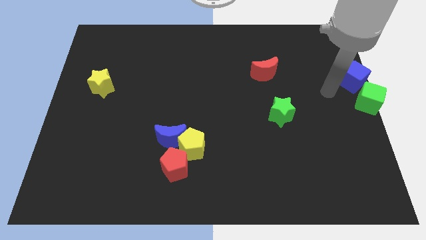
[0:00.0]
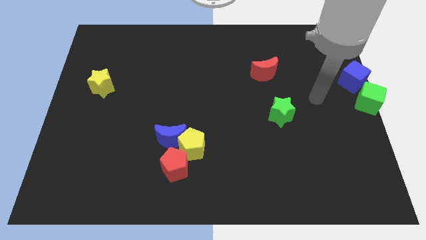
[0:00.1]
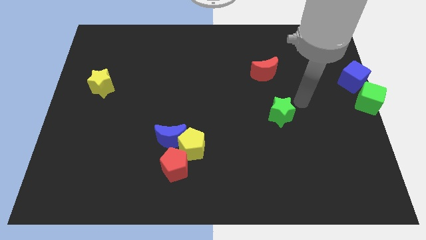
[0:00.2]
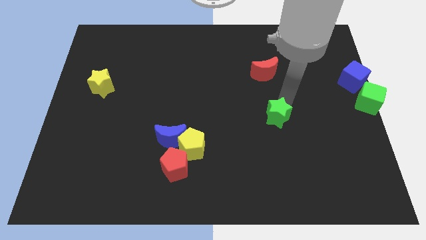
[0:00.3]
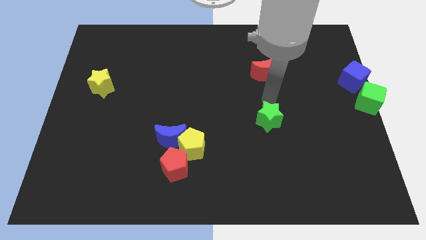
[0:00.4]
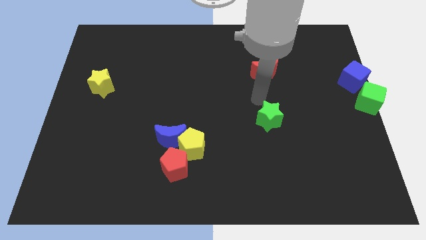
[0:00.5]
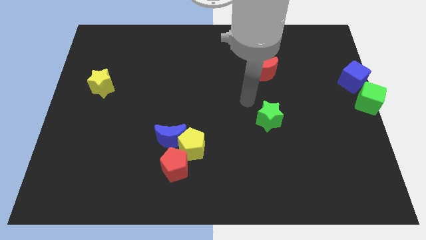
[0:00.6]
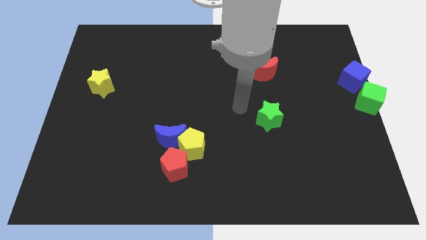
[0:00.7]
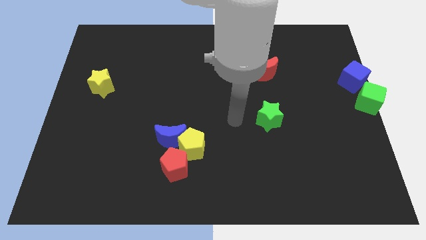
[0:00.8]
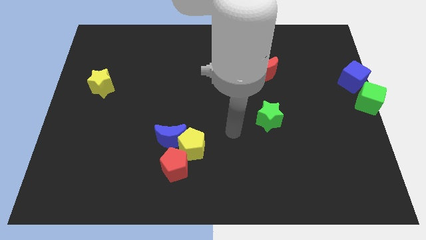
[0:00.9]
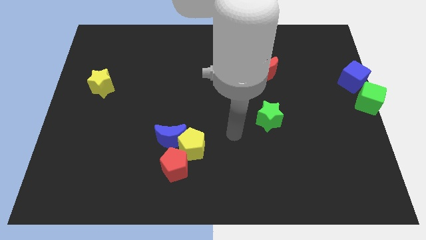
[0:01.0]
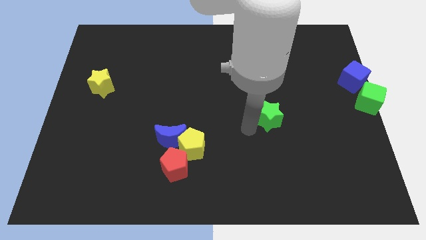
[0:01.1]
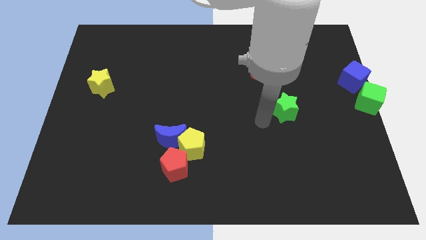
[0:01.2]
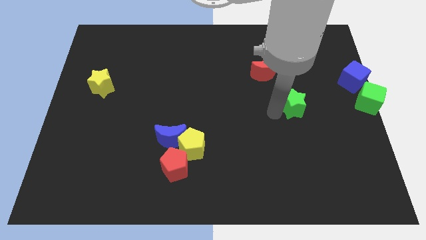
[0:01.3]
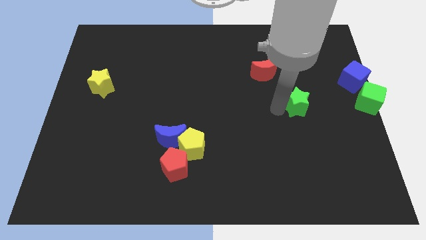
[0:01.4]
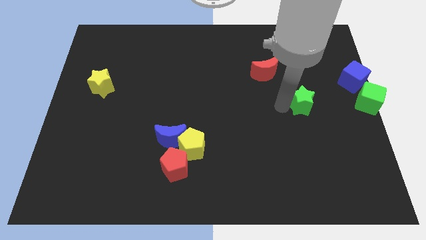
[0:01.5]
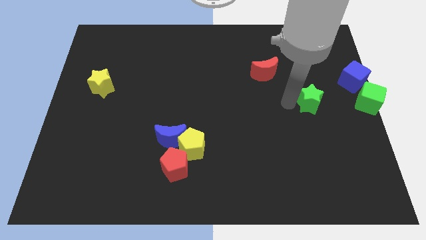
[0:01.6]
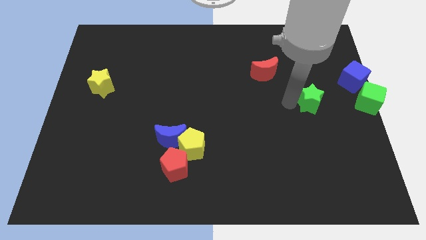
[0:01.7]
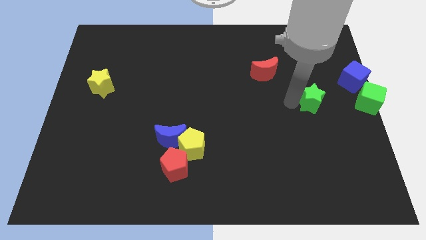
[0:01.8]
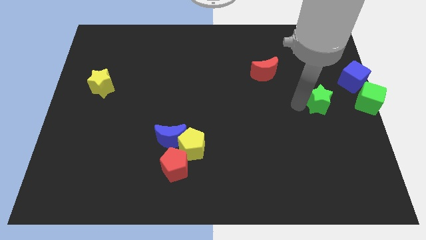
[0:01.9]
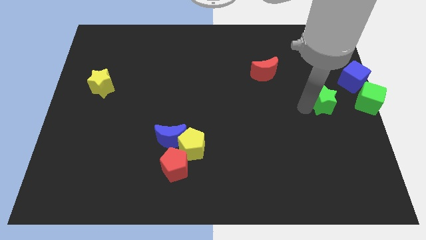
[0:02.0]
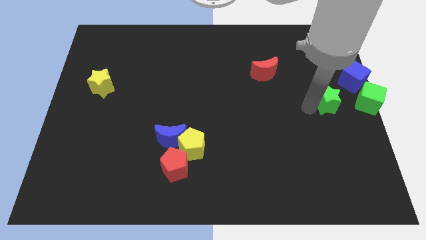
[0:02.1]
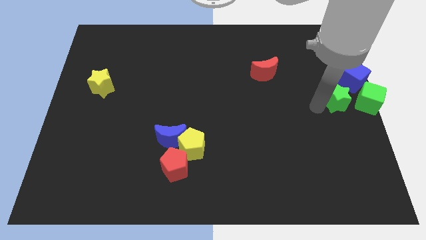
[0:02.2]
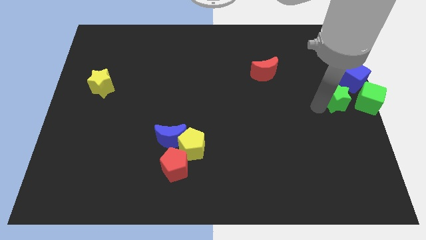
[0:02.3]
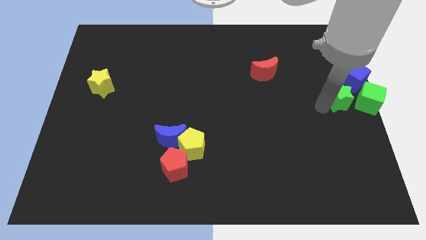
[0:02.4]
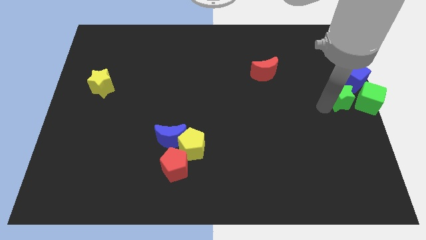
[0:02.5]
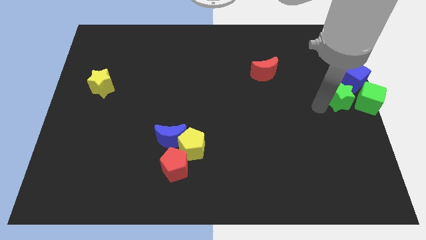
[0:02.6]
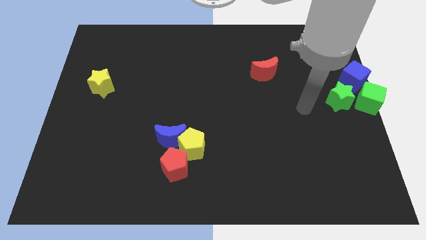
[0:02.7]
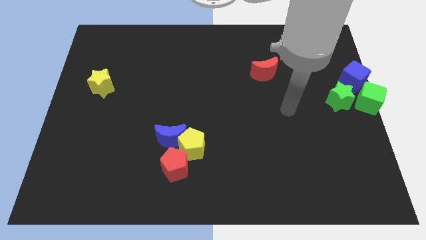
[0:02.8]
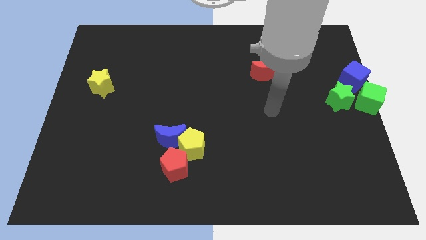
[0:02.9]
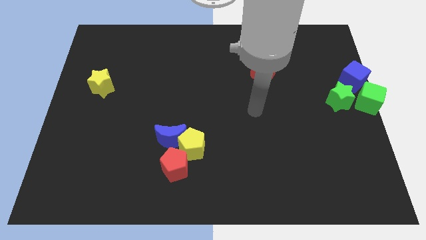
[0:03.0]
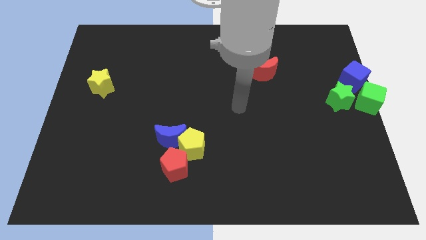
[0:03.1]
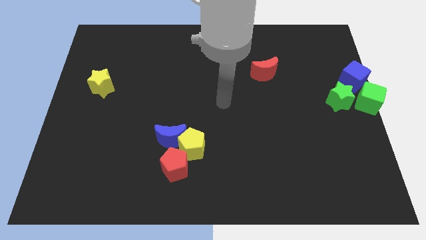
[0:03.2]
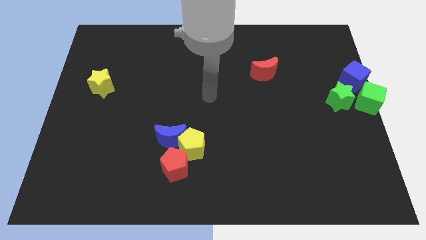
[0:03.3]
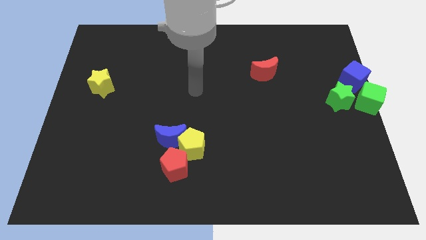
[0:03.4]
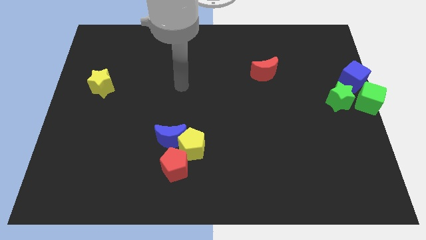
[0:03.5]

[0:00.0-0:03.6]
place the green star left to the green cube

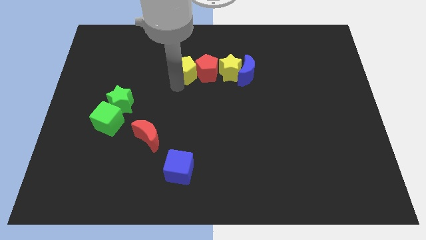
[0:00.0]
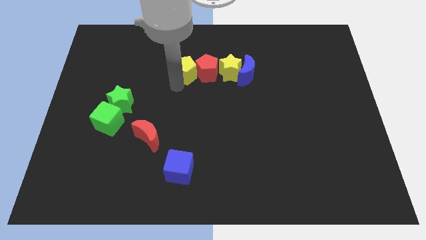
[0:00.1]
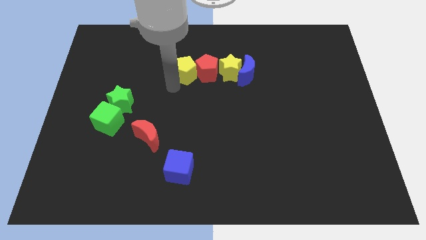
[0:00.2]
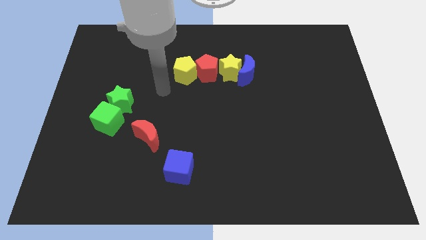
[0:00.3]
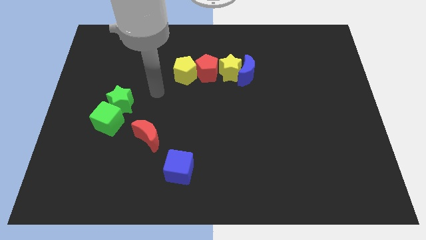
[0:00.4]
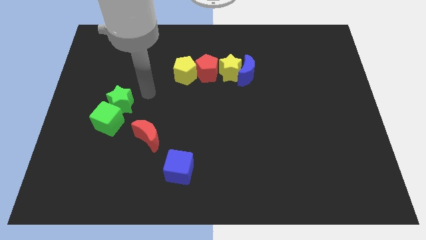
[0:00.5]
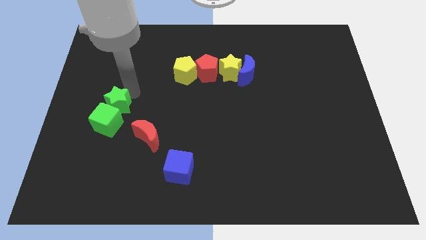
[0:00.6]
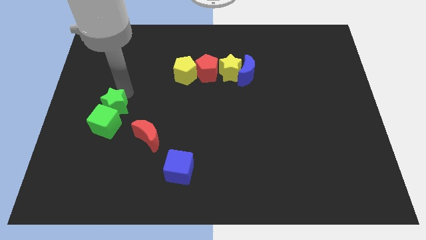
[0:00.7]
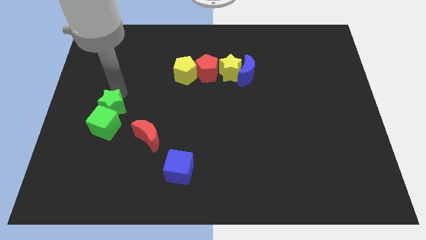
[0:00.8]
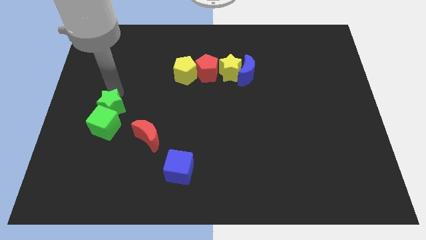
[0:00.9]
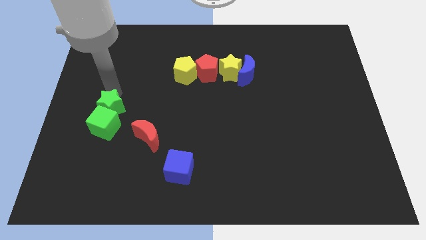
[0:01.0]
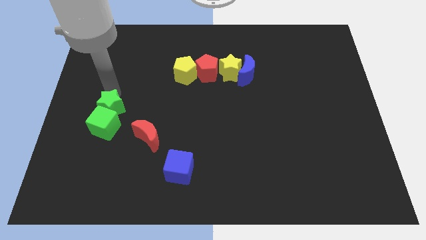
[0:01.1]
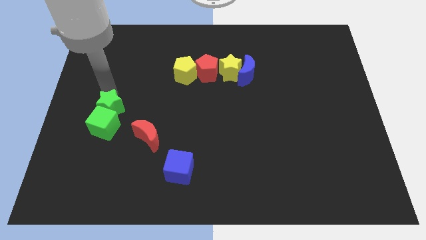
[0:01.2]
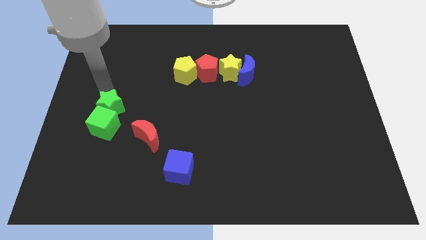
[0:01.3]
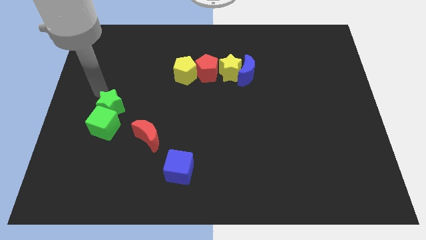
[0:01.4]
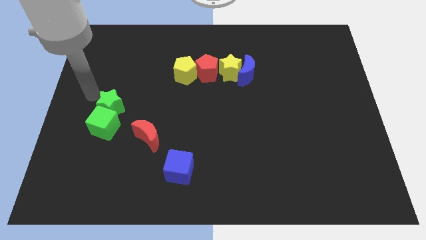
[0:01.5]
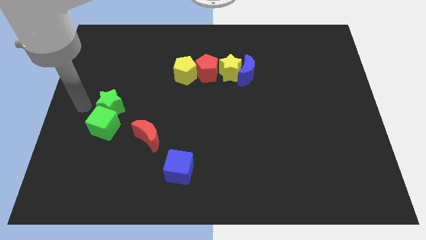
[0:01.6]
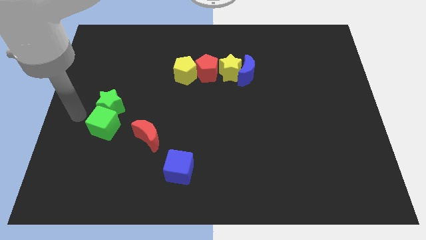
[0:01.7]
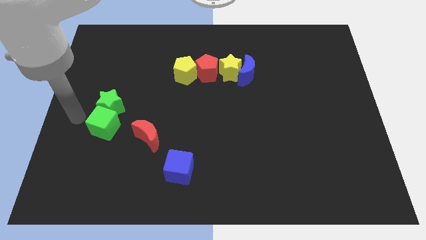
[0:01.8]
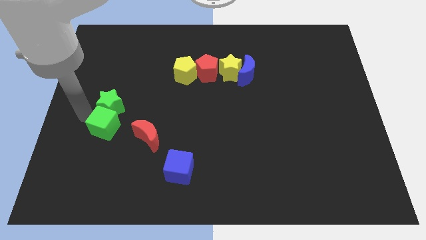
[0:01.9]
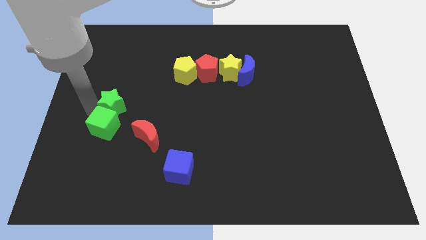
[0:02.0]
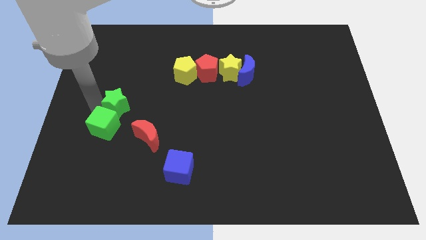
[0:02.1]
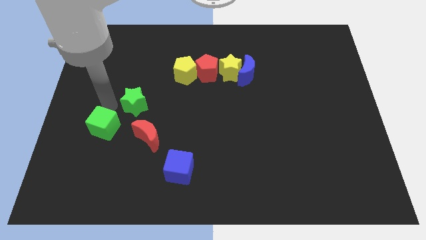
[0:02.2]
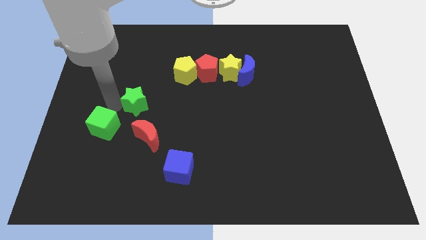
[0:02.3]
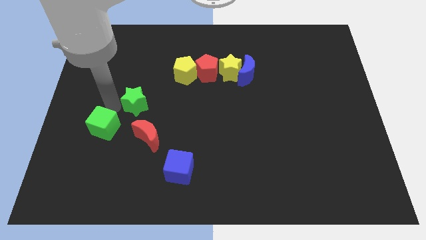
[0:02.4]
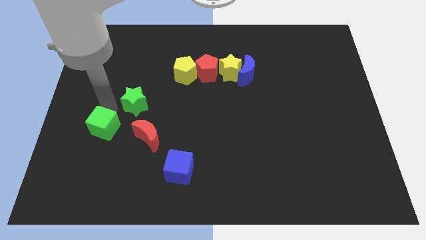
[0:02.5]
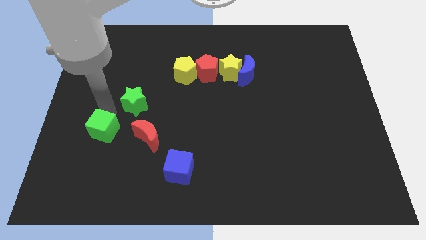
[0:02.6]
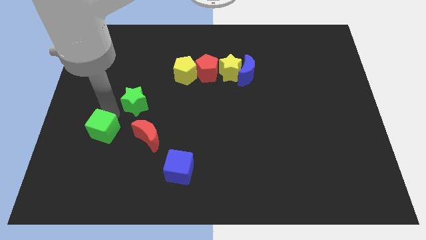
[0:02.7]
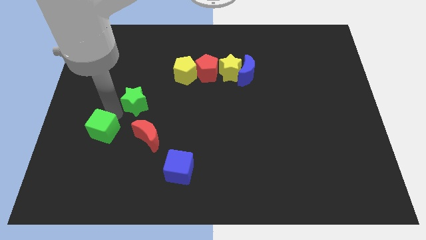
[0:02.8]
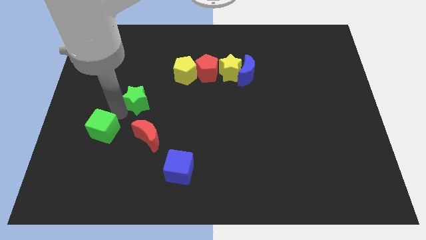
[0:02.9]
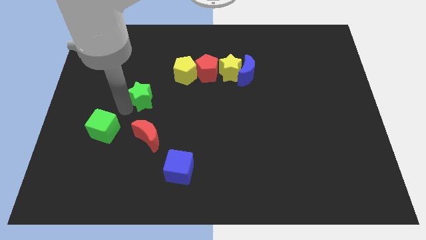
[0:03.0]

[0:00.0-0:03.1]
slightly move the green star upwards

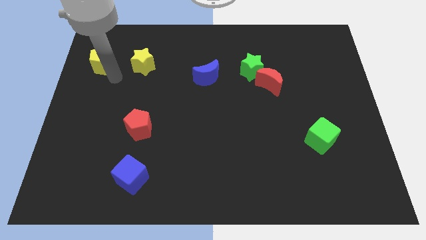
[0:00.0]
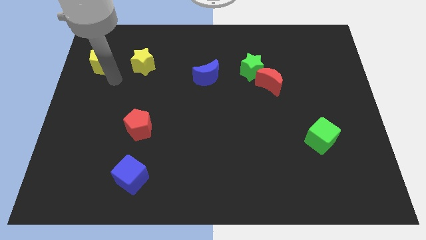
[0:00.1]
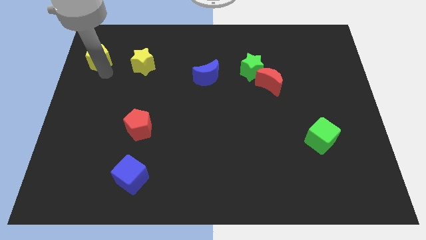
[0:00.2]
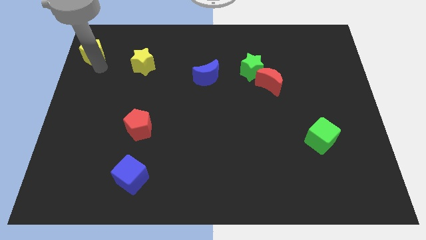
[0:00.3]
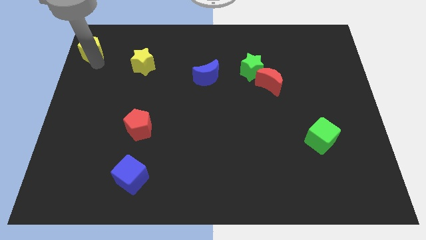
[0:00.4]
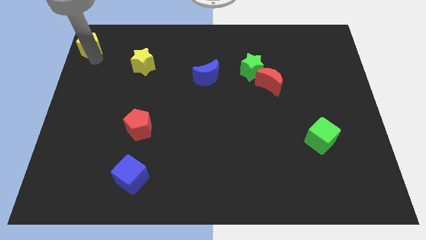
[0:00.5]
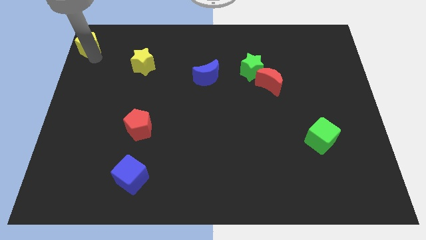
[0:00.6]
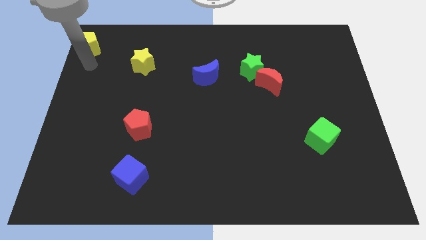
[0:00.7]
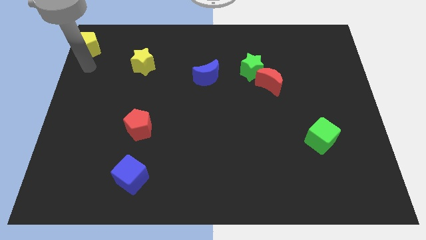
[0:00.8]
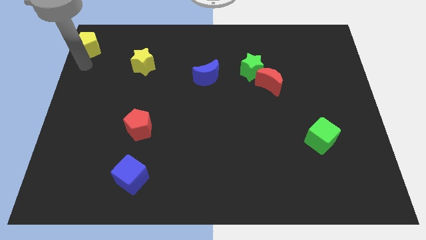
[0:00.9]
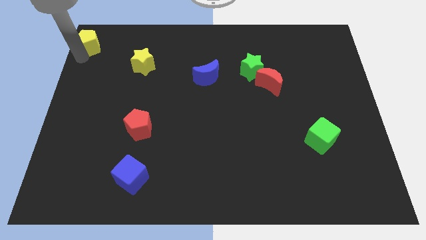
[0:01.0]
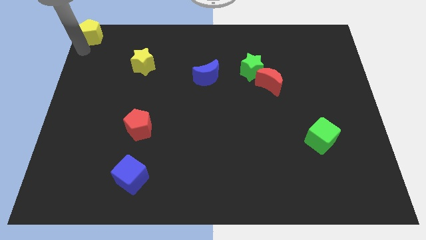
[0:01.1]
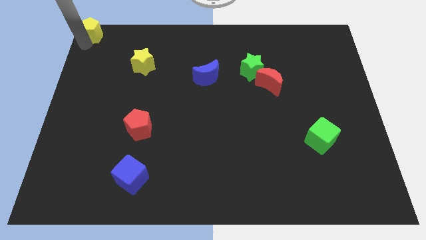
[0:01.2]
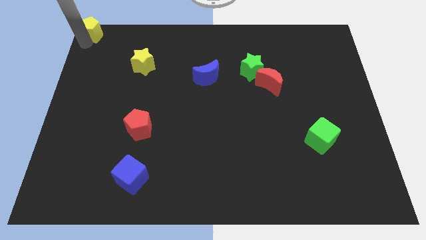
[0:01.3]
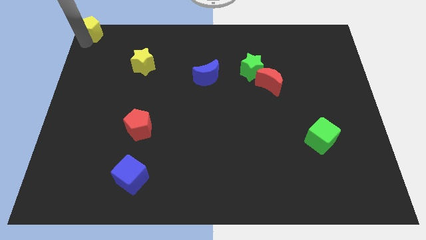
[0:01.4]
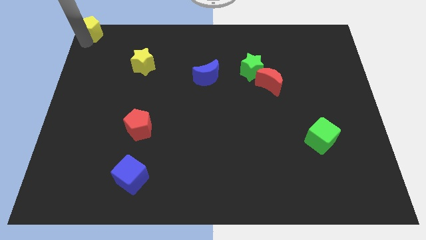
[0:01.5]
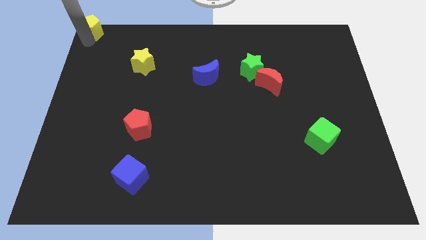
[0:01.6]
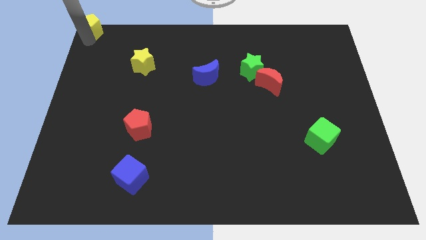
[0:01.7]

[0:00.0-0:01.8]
place yellow pentagon to the top left corner of the board

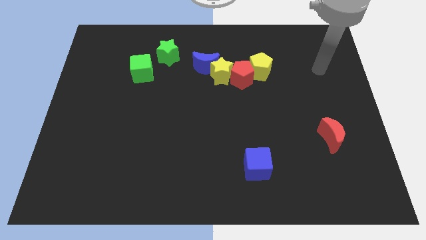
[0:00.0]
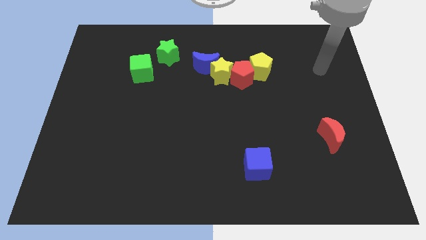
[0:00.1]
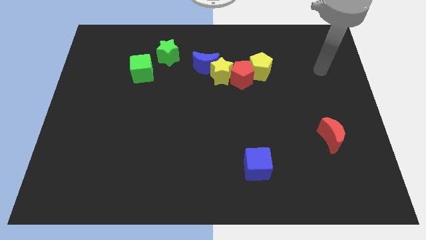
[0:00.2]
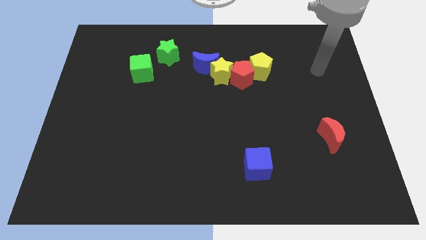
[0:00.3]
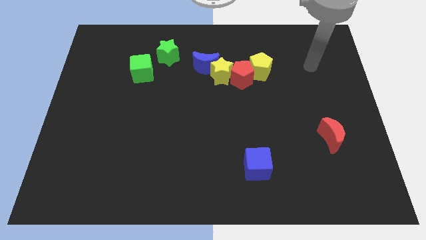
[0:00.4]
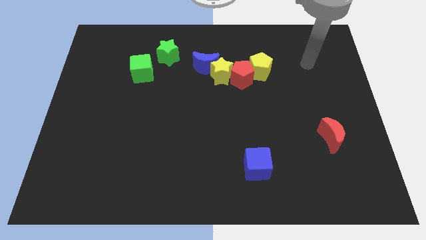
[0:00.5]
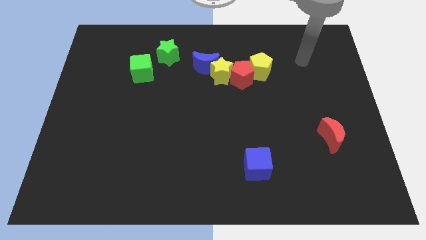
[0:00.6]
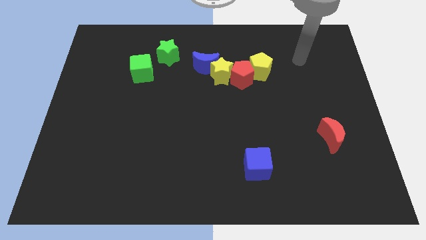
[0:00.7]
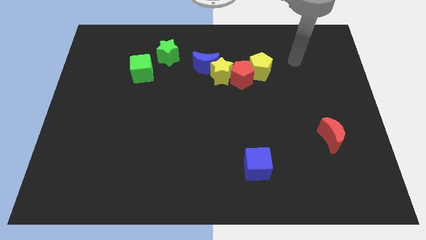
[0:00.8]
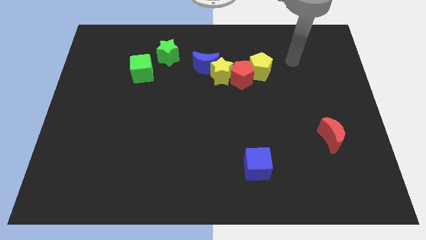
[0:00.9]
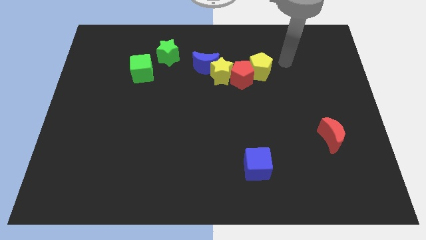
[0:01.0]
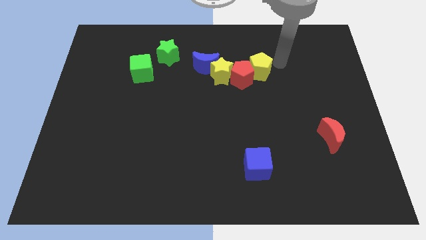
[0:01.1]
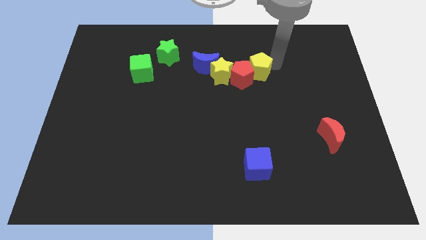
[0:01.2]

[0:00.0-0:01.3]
point your arm at the right of the yellow pentagon
